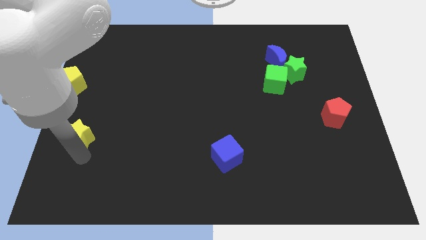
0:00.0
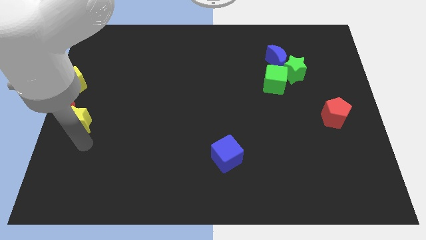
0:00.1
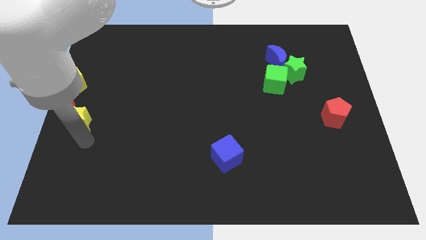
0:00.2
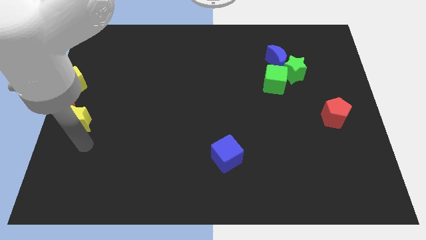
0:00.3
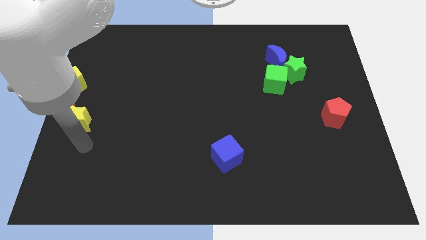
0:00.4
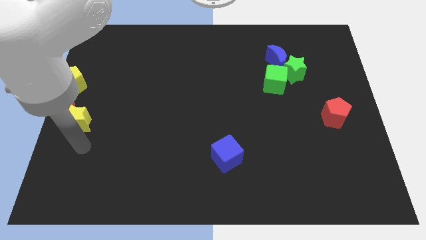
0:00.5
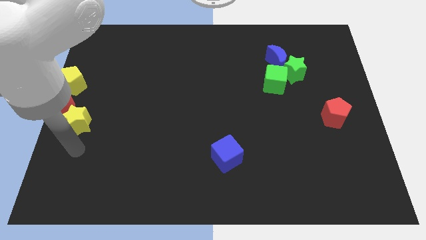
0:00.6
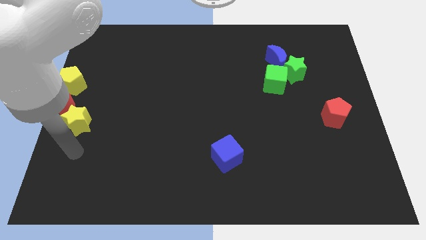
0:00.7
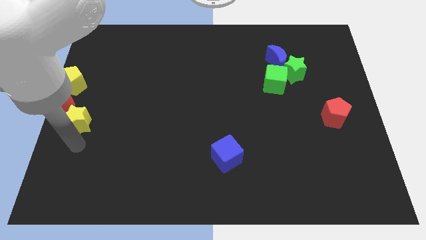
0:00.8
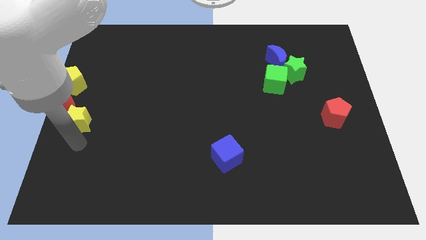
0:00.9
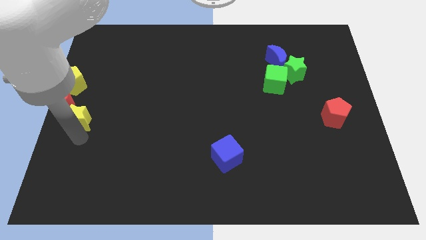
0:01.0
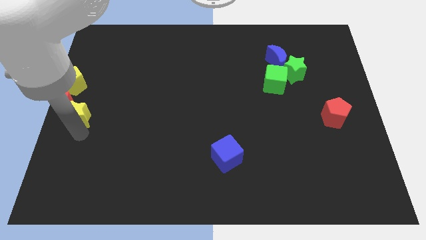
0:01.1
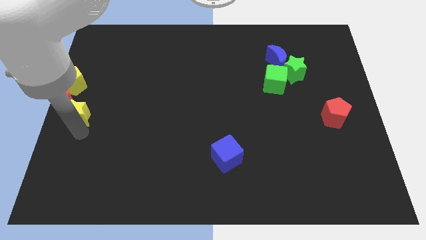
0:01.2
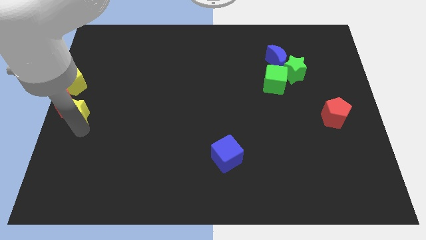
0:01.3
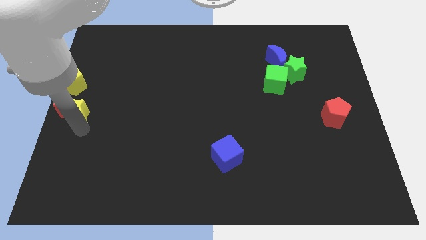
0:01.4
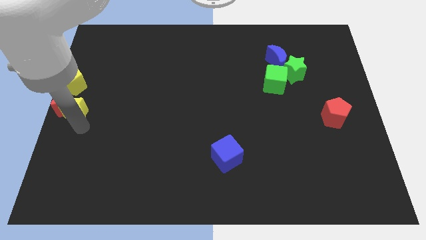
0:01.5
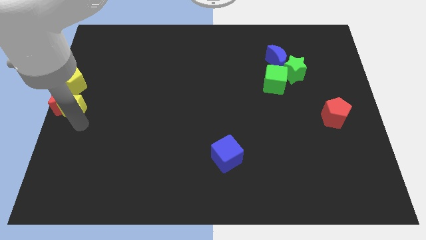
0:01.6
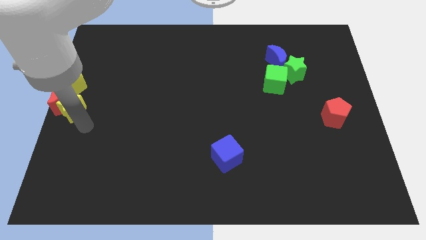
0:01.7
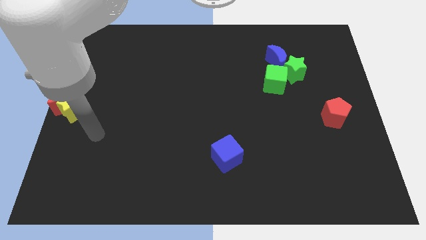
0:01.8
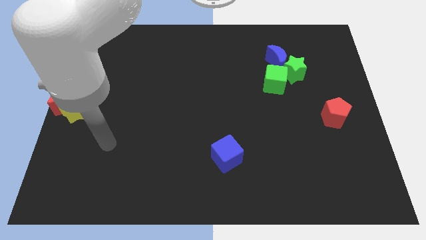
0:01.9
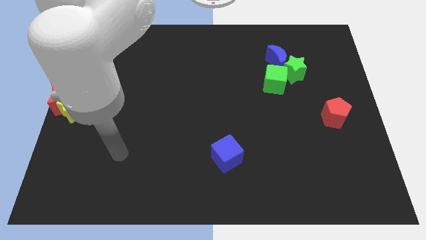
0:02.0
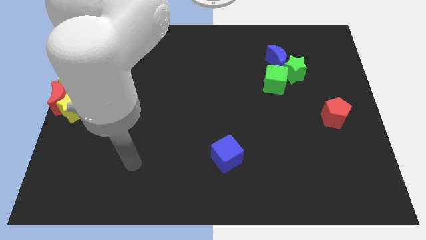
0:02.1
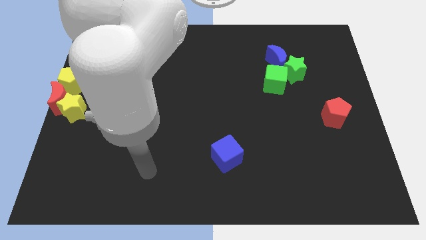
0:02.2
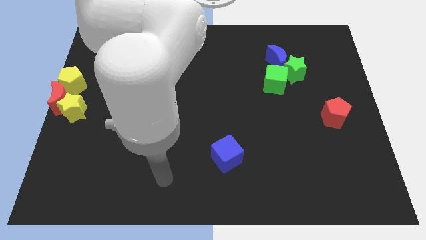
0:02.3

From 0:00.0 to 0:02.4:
push yellow star into the red crescent

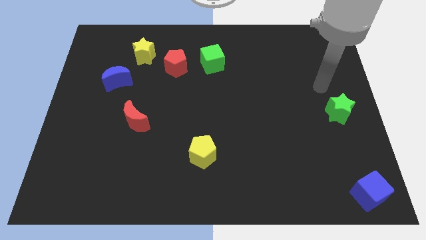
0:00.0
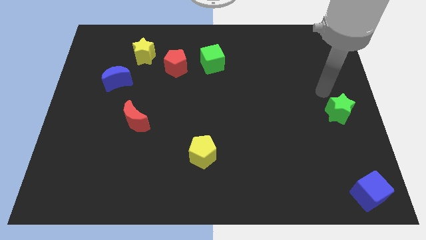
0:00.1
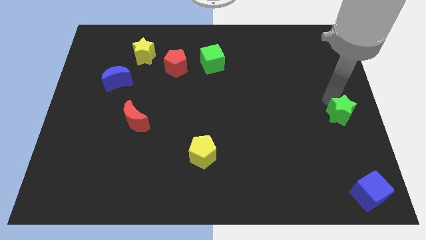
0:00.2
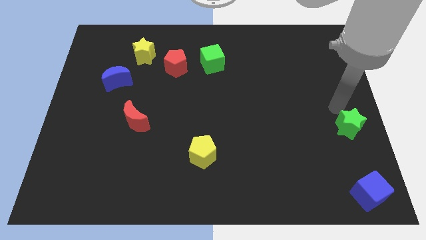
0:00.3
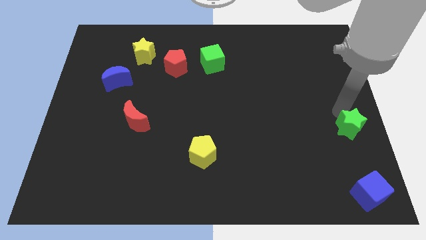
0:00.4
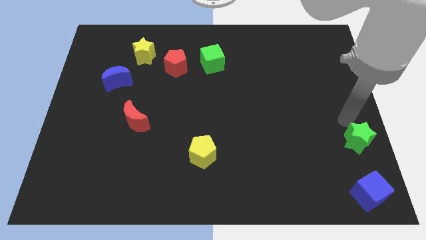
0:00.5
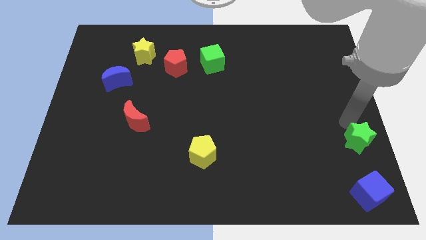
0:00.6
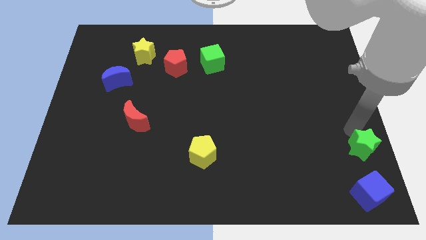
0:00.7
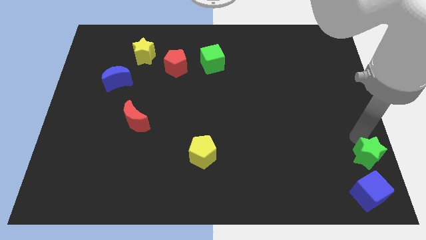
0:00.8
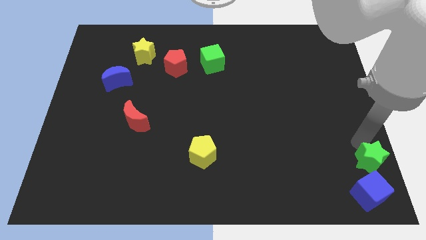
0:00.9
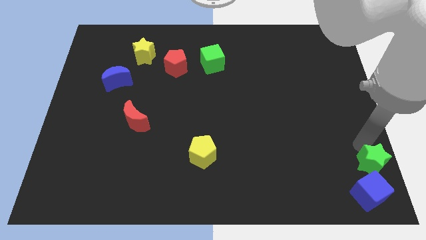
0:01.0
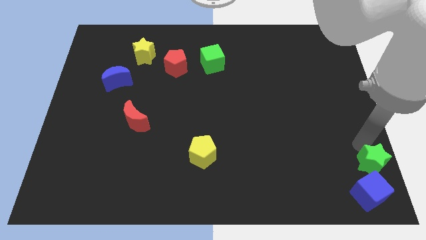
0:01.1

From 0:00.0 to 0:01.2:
push the green star to the top of the blue cube

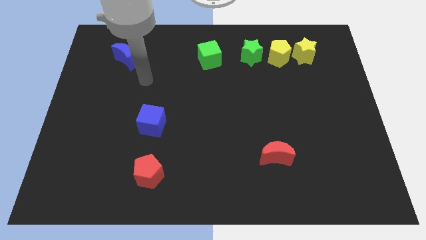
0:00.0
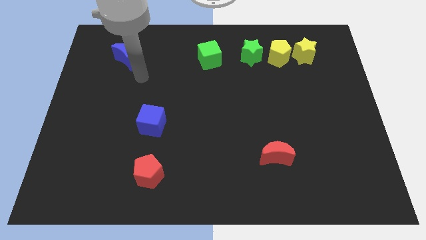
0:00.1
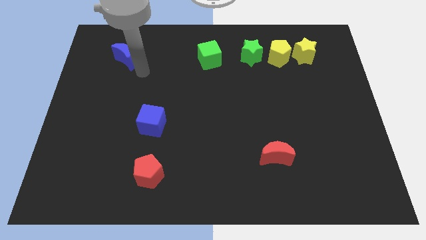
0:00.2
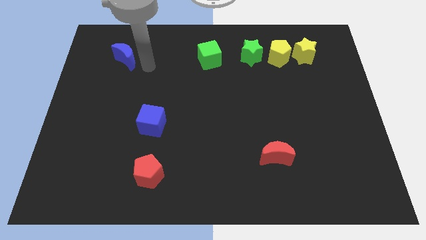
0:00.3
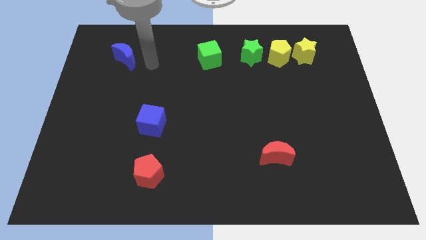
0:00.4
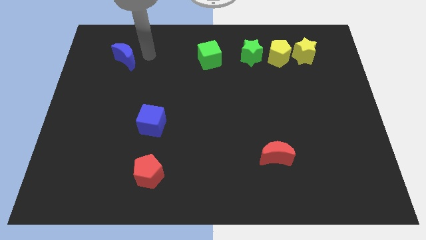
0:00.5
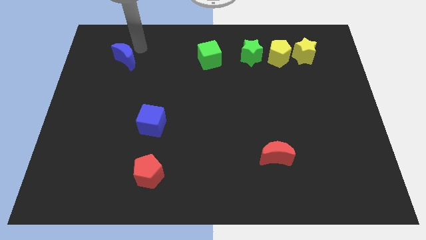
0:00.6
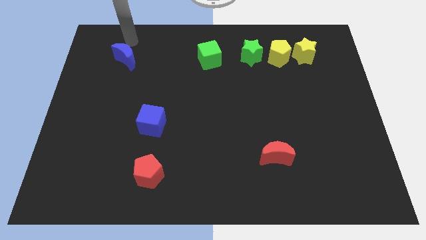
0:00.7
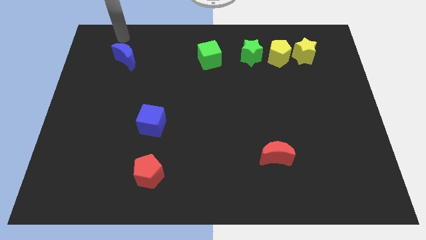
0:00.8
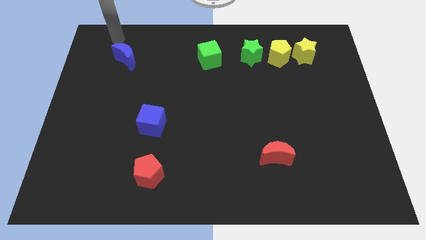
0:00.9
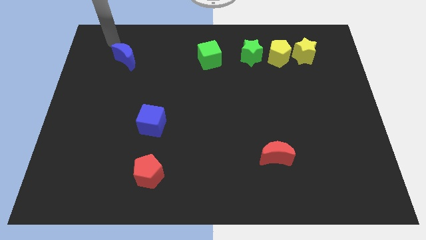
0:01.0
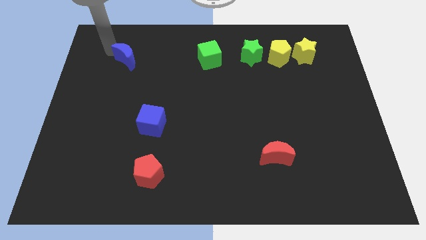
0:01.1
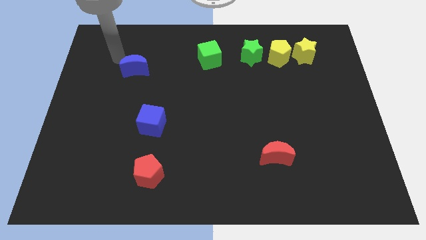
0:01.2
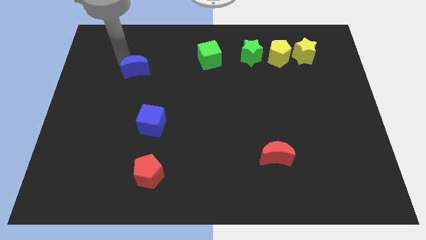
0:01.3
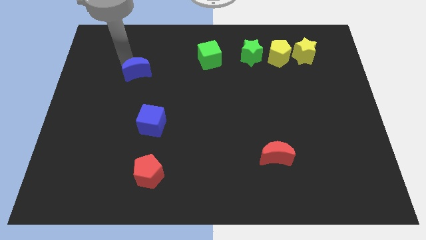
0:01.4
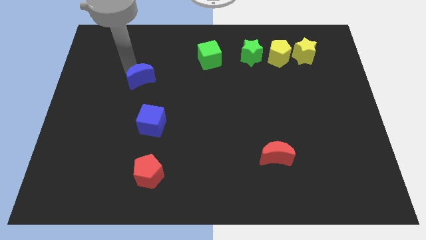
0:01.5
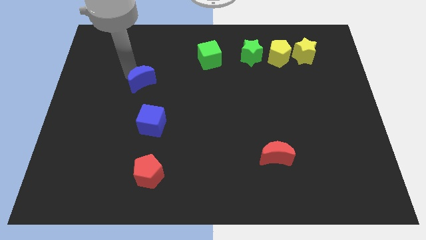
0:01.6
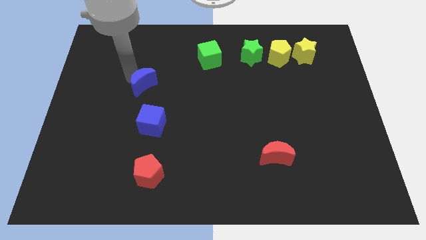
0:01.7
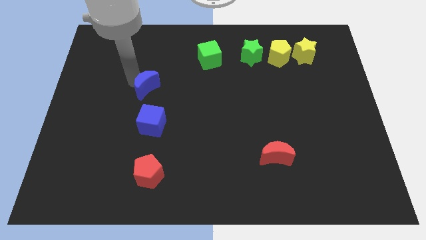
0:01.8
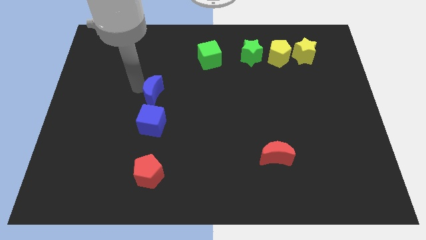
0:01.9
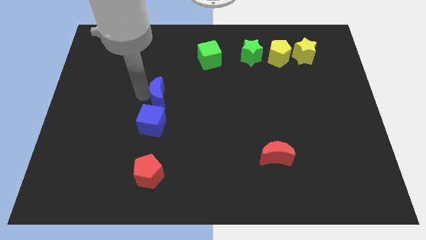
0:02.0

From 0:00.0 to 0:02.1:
place blue moon above blue cube

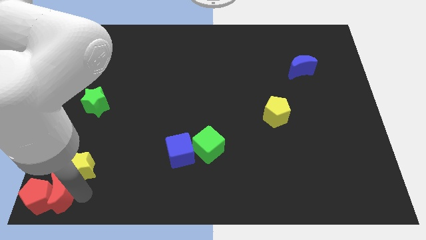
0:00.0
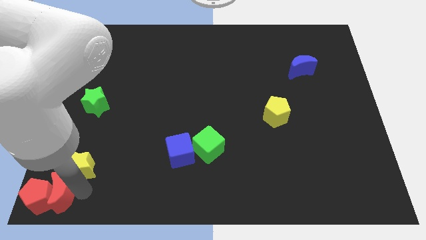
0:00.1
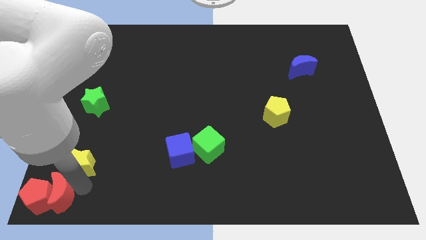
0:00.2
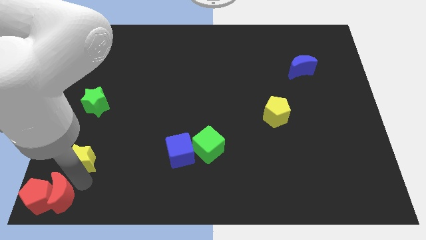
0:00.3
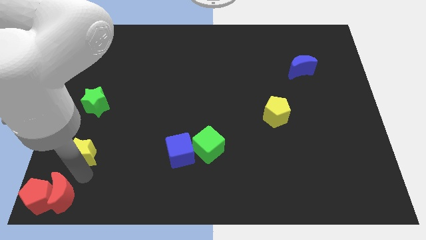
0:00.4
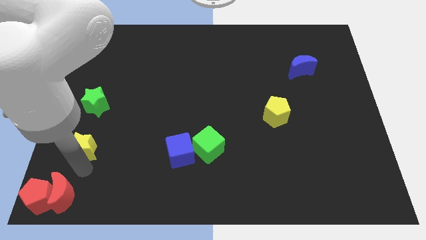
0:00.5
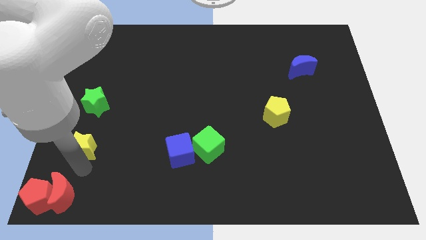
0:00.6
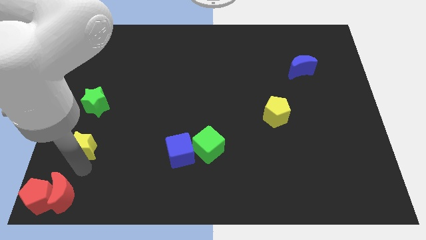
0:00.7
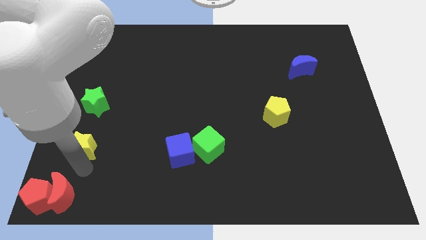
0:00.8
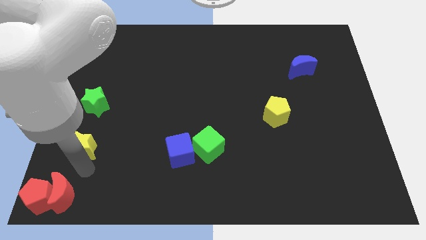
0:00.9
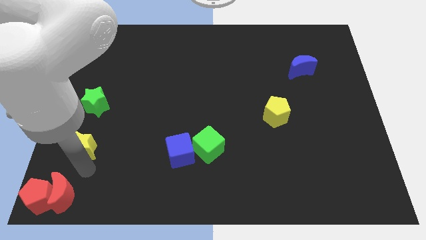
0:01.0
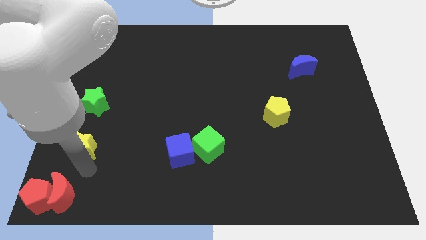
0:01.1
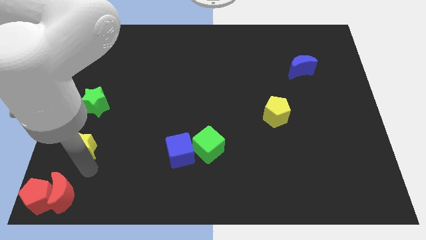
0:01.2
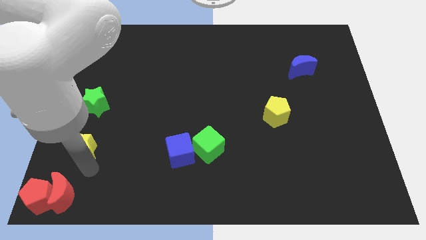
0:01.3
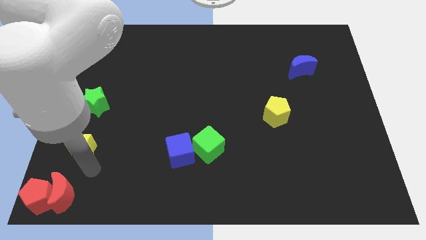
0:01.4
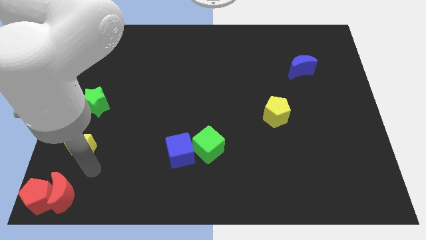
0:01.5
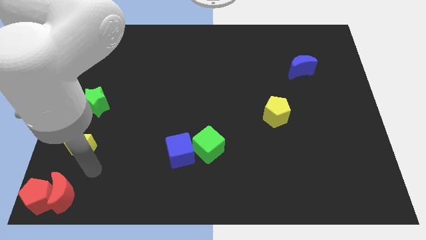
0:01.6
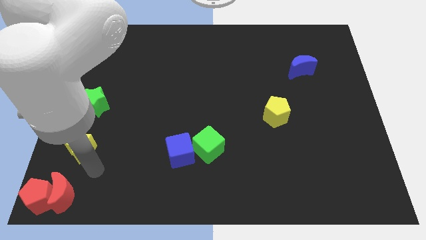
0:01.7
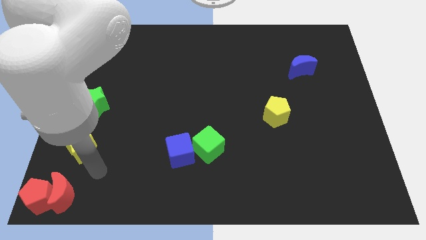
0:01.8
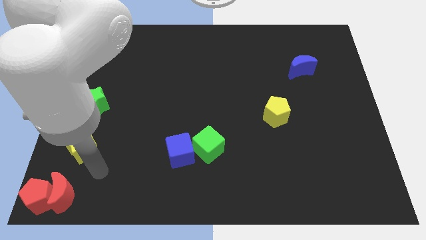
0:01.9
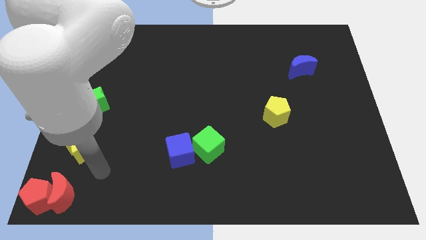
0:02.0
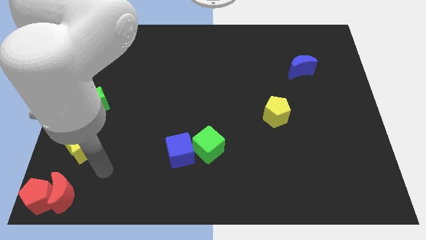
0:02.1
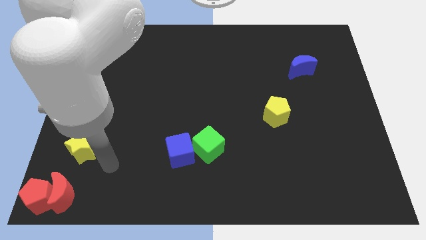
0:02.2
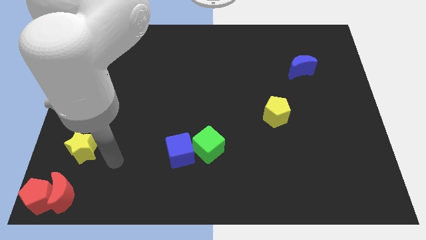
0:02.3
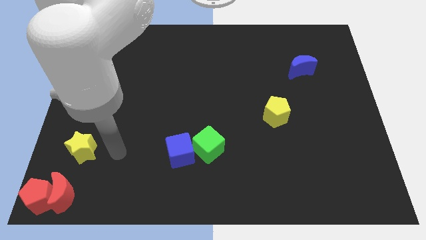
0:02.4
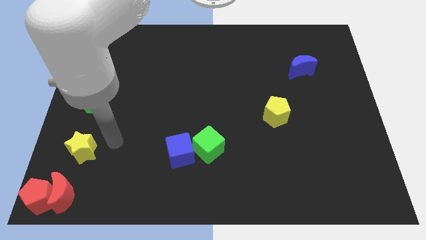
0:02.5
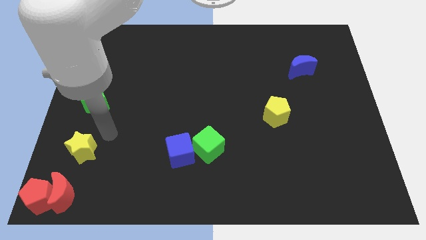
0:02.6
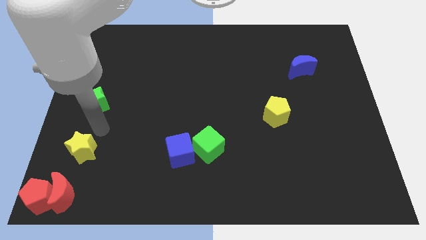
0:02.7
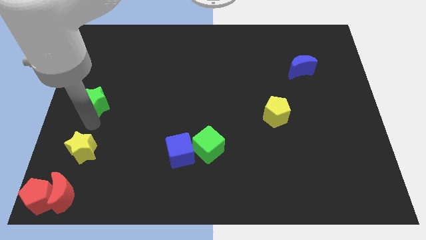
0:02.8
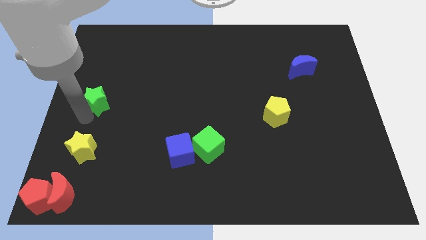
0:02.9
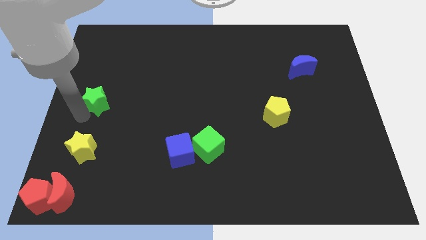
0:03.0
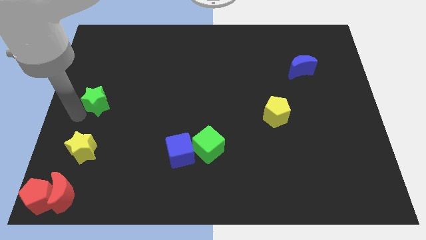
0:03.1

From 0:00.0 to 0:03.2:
slightly push the yellow star upwards

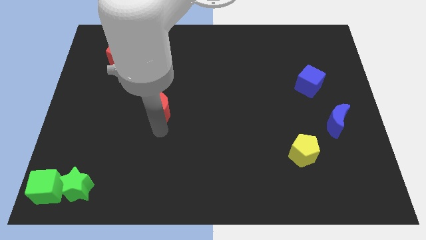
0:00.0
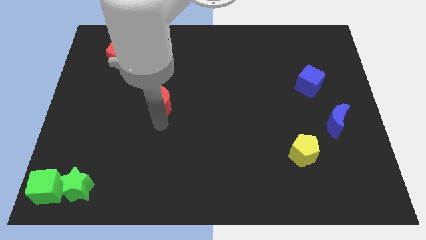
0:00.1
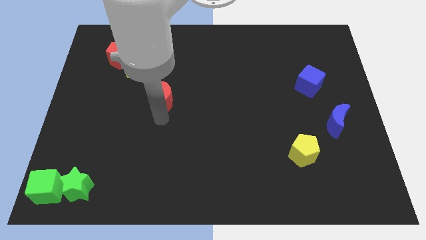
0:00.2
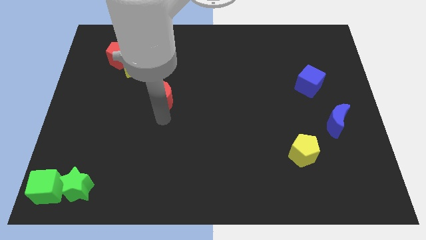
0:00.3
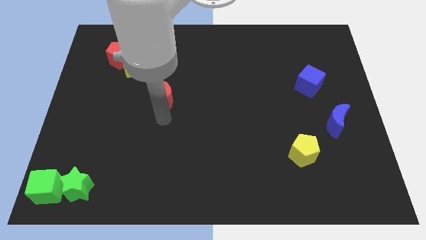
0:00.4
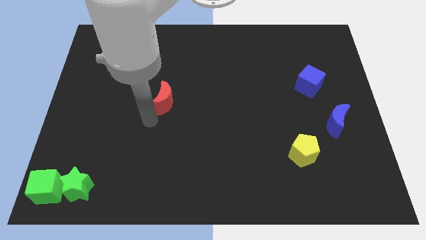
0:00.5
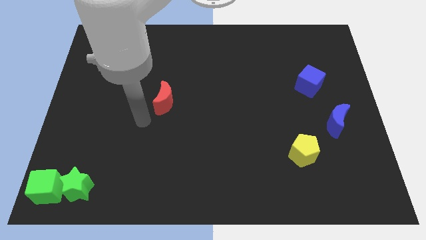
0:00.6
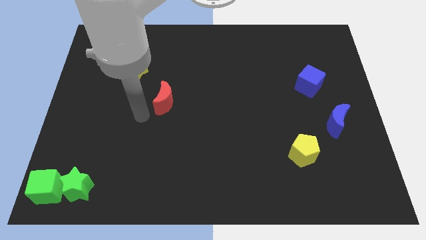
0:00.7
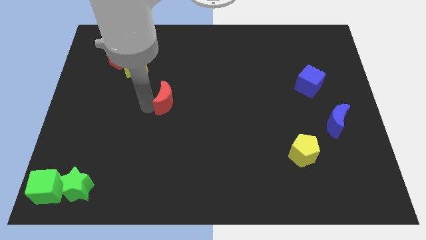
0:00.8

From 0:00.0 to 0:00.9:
move the red crescent slightly of the board
